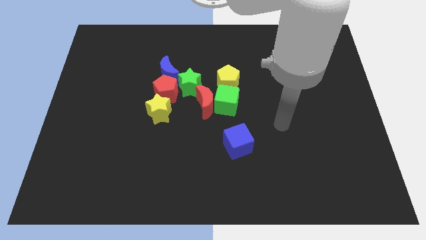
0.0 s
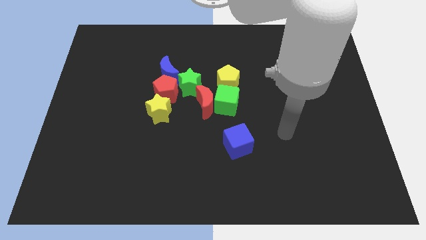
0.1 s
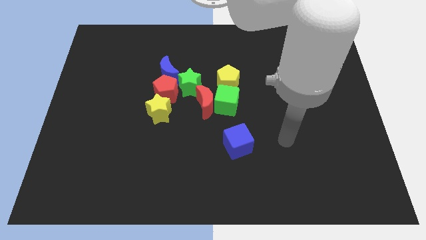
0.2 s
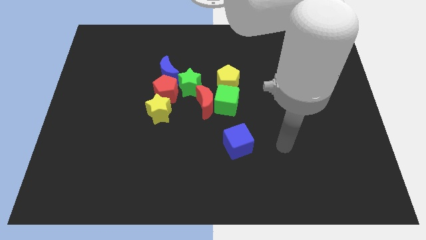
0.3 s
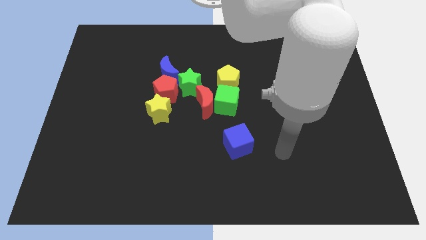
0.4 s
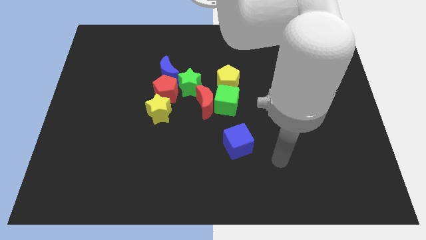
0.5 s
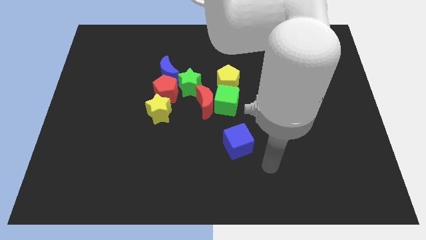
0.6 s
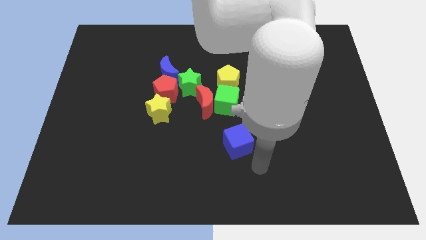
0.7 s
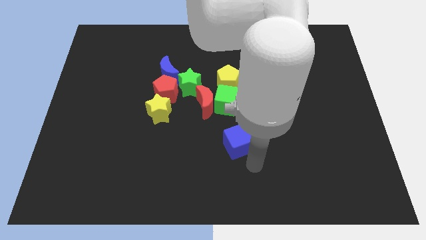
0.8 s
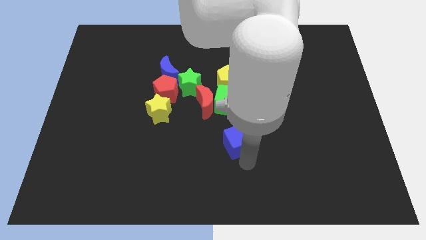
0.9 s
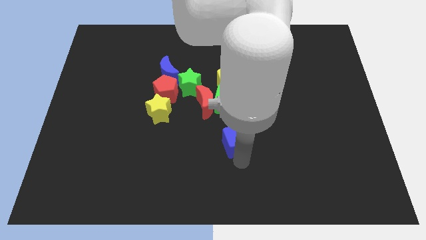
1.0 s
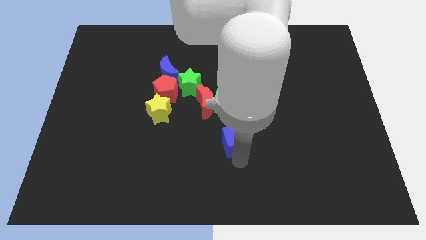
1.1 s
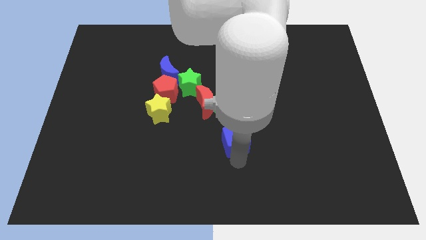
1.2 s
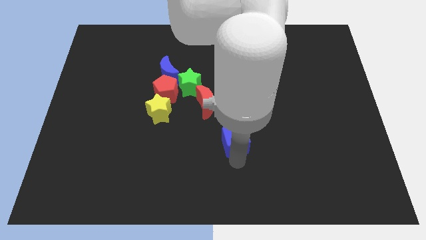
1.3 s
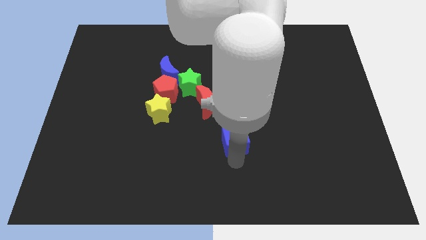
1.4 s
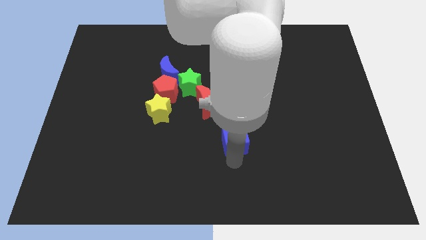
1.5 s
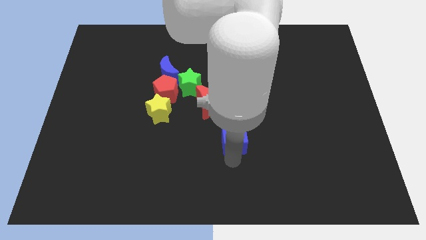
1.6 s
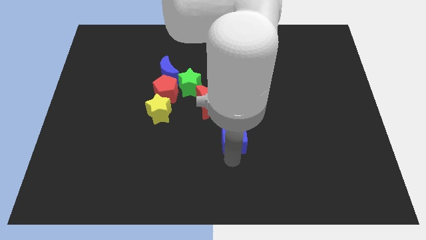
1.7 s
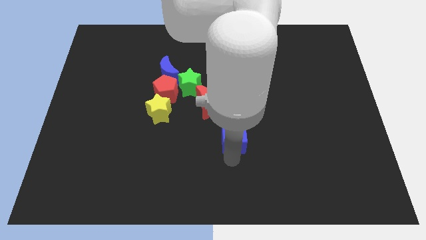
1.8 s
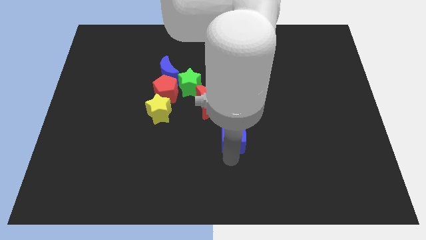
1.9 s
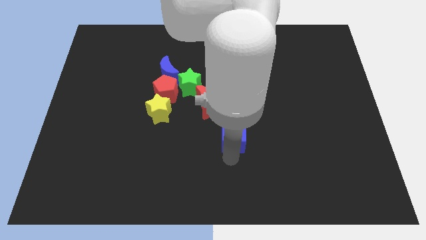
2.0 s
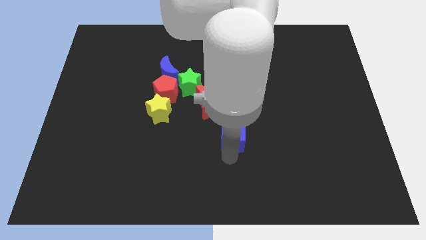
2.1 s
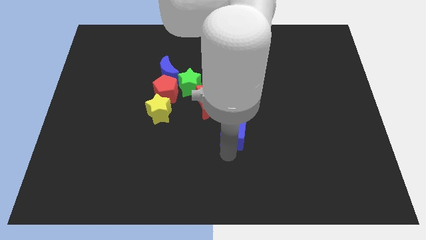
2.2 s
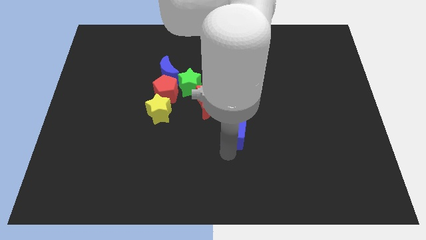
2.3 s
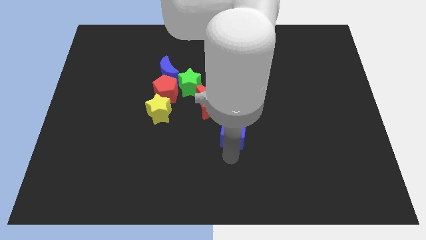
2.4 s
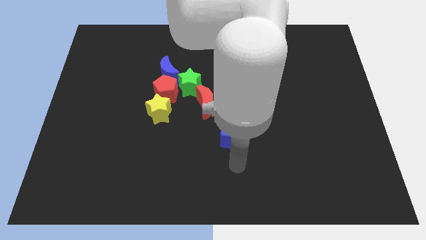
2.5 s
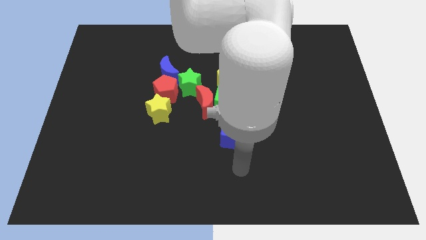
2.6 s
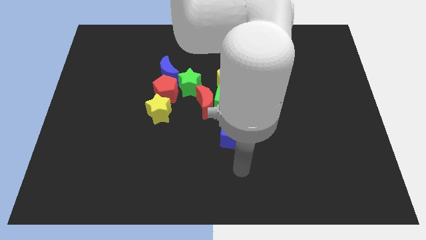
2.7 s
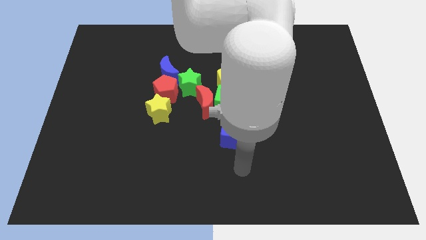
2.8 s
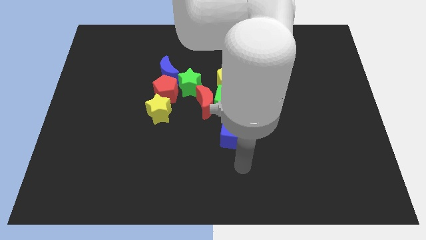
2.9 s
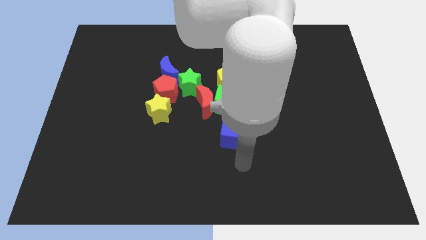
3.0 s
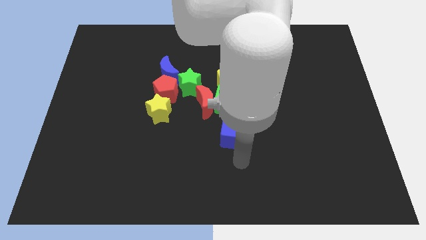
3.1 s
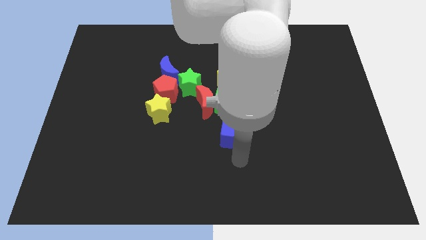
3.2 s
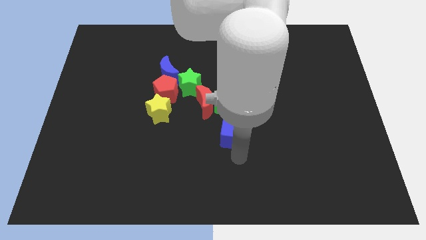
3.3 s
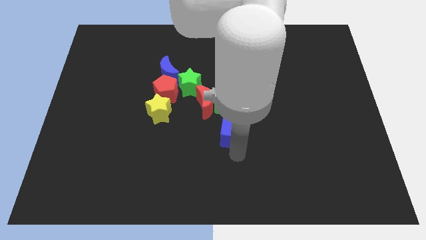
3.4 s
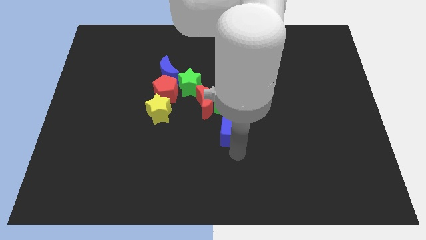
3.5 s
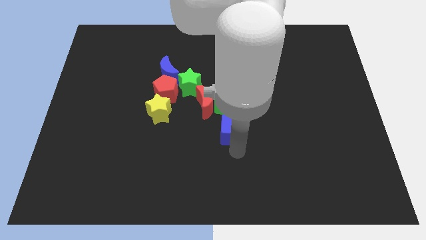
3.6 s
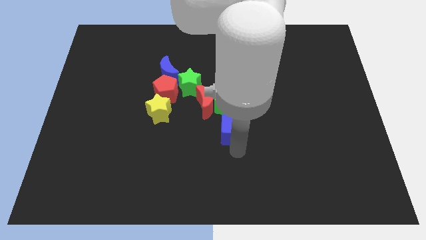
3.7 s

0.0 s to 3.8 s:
move the blue cube below to the green cube

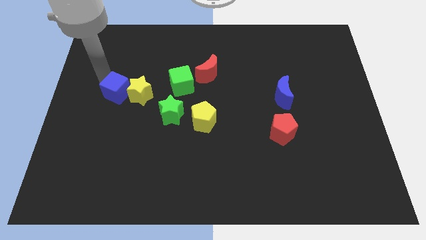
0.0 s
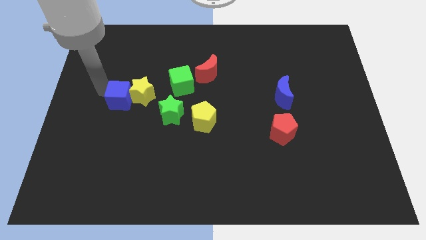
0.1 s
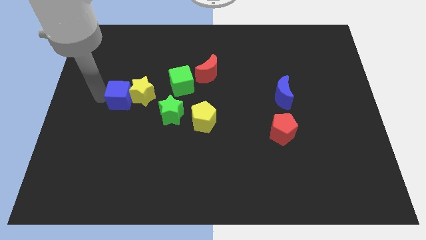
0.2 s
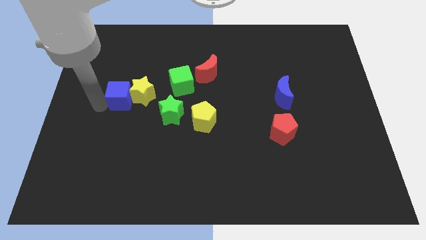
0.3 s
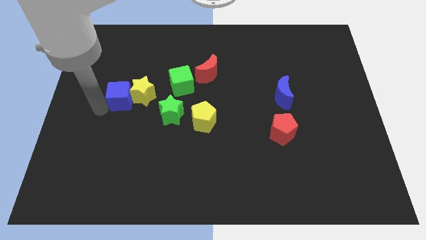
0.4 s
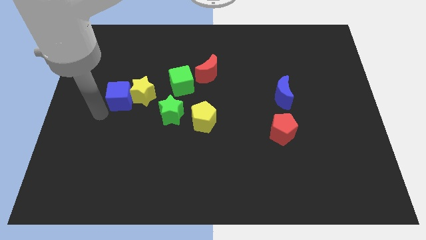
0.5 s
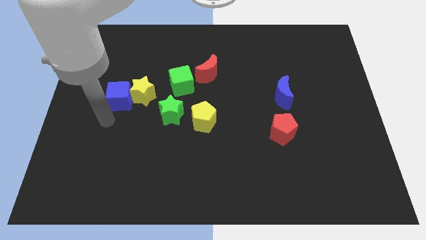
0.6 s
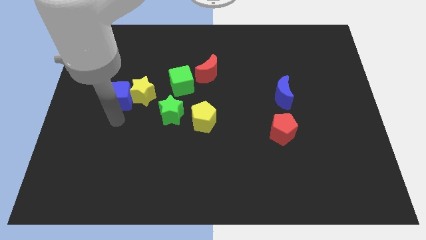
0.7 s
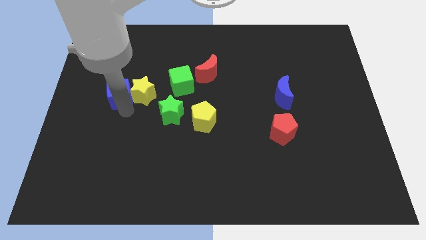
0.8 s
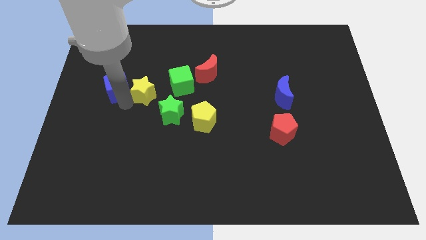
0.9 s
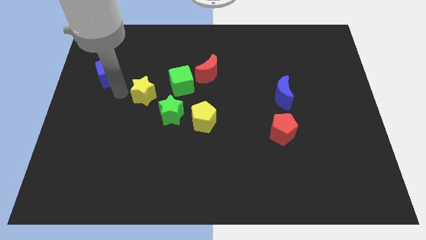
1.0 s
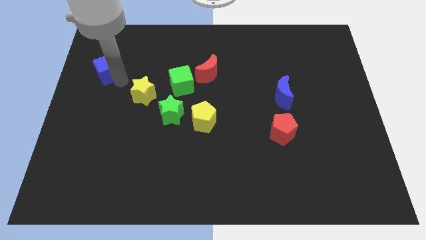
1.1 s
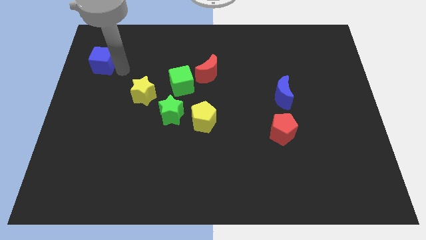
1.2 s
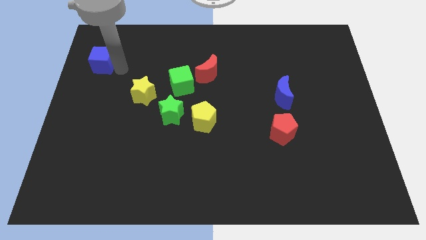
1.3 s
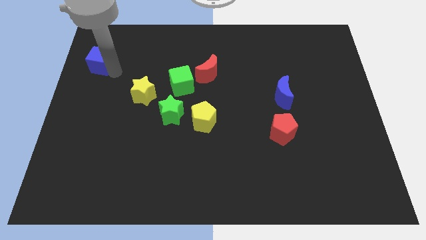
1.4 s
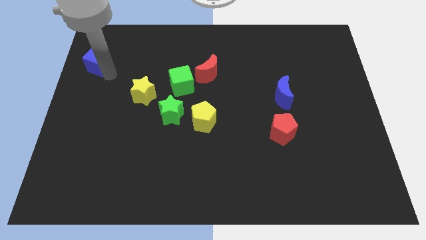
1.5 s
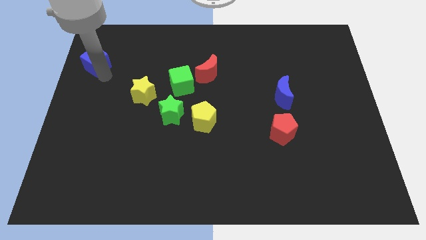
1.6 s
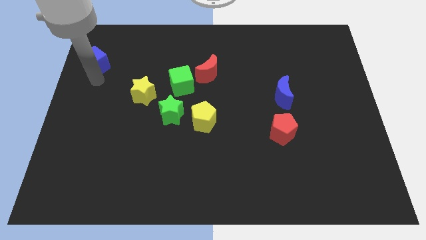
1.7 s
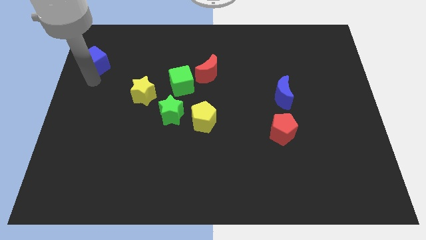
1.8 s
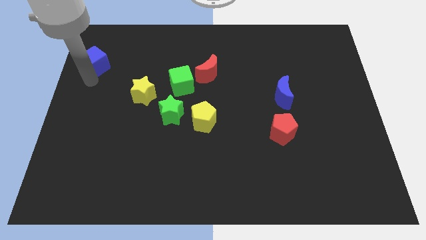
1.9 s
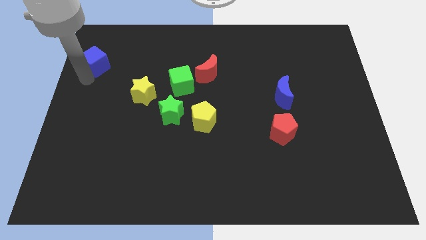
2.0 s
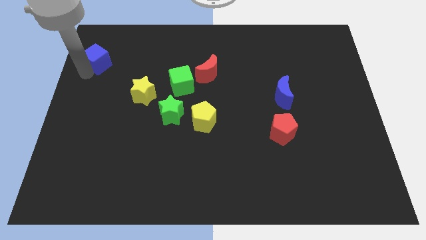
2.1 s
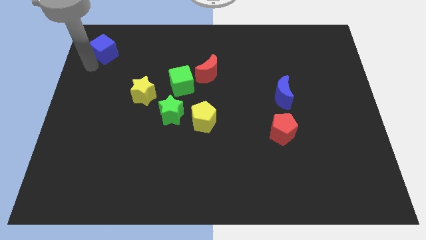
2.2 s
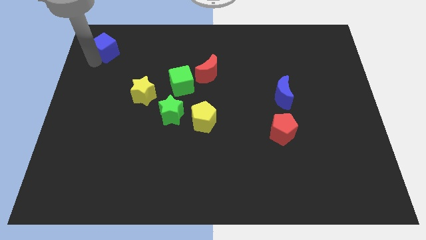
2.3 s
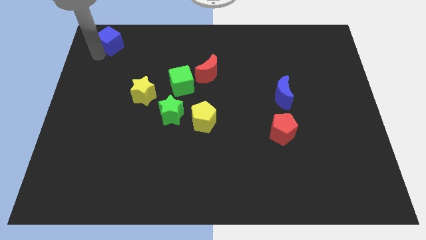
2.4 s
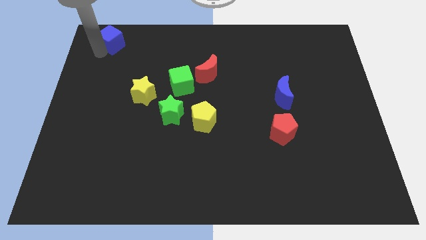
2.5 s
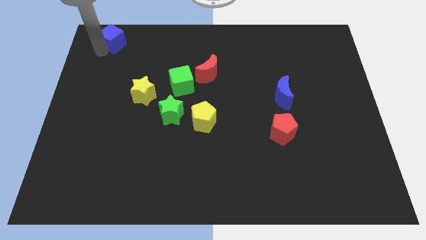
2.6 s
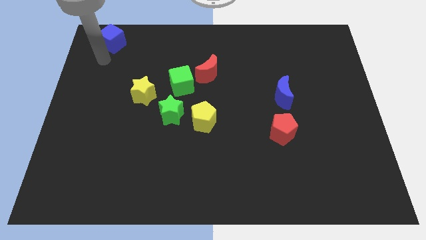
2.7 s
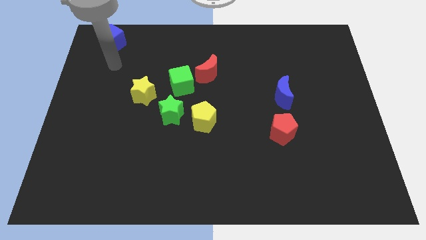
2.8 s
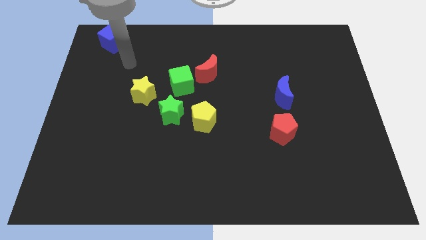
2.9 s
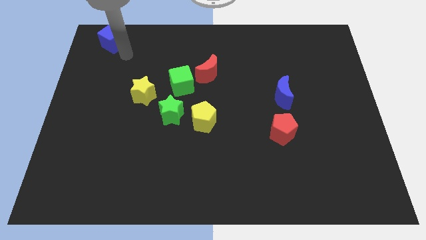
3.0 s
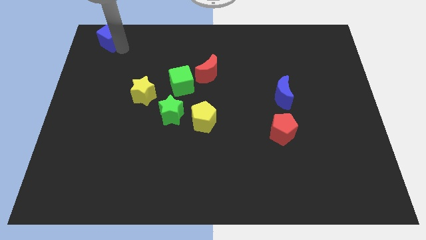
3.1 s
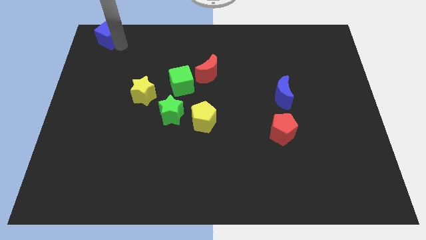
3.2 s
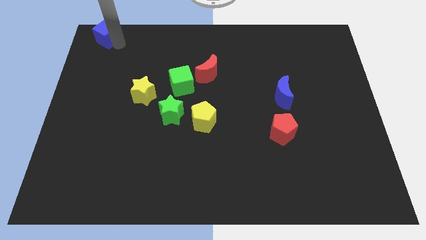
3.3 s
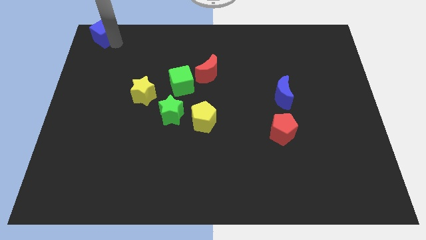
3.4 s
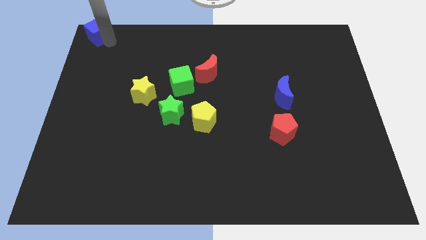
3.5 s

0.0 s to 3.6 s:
move the blue cube towards top left corner of the board

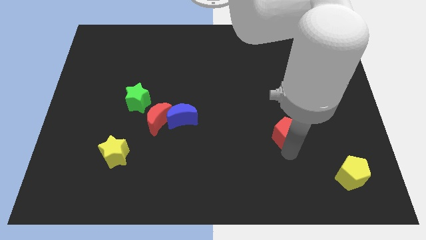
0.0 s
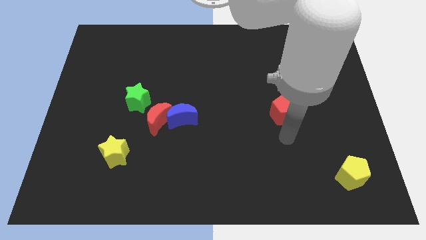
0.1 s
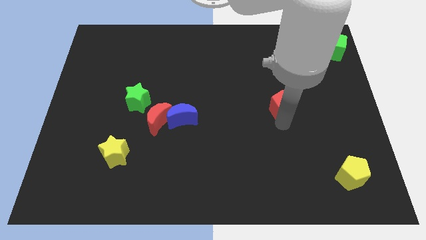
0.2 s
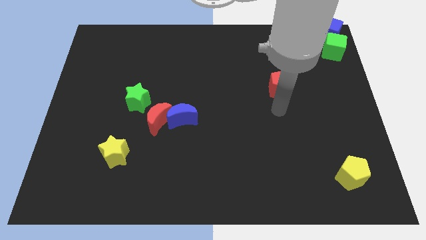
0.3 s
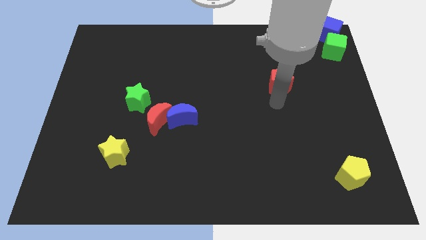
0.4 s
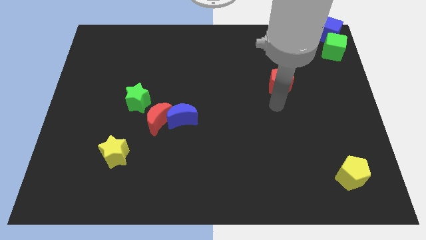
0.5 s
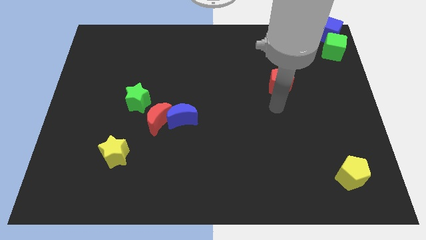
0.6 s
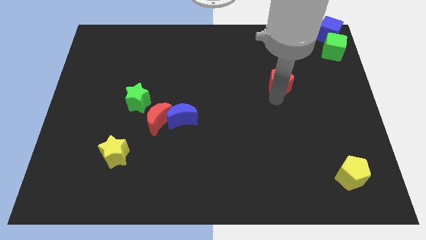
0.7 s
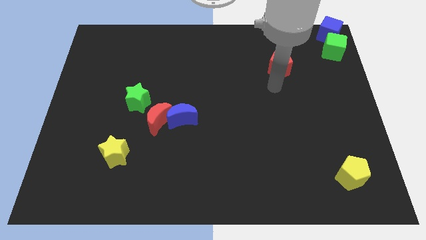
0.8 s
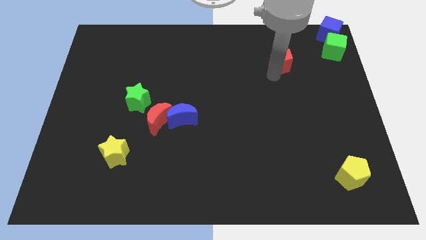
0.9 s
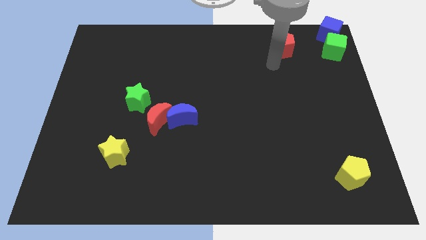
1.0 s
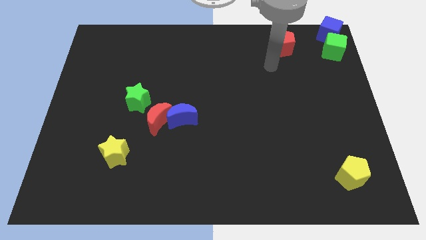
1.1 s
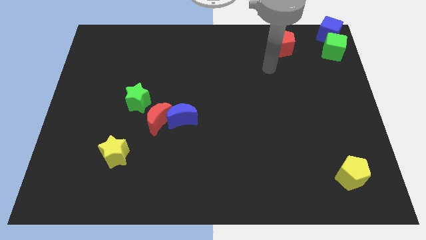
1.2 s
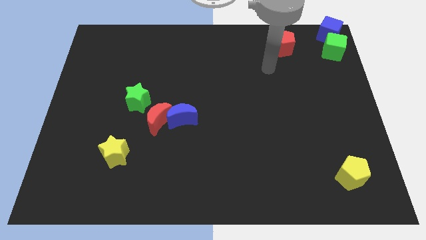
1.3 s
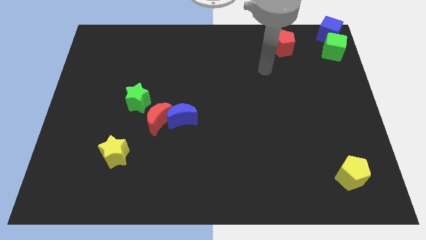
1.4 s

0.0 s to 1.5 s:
place the red pentagon to the left side of the green cube

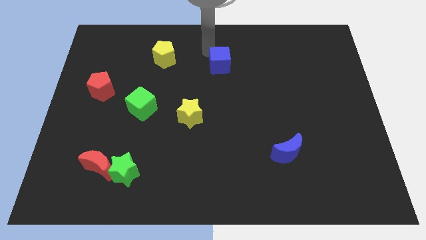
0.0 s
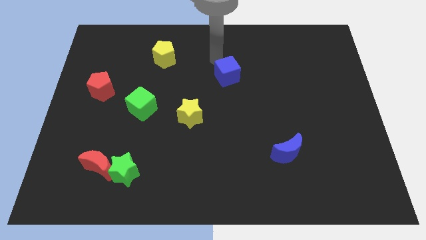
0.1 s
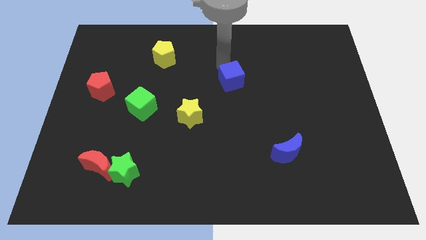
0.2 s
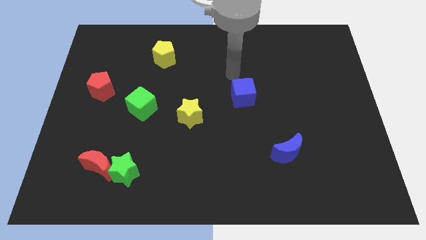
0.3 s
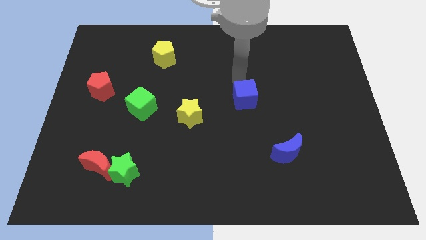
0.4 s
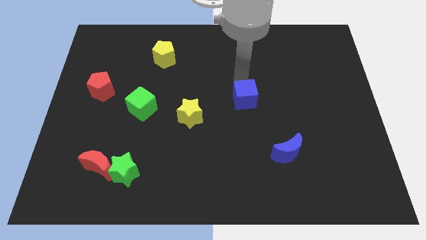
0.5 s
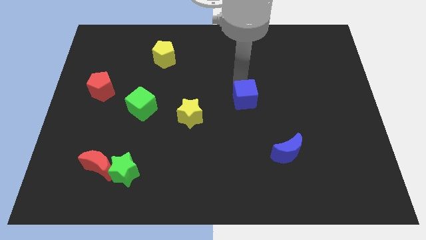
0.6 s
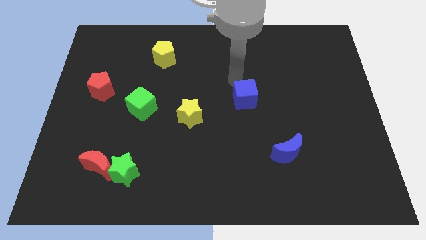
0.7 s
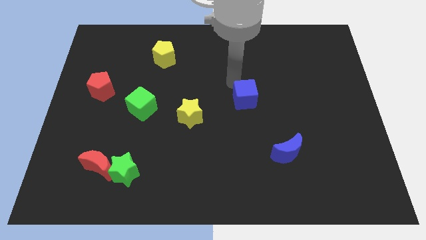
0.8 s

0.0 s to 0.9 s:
push the blue cube towards the blue crescent
